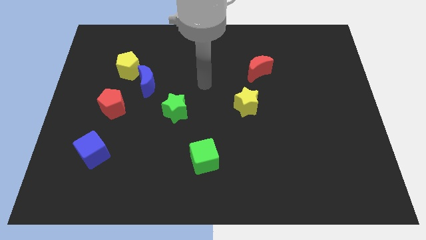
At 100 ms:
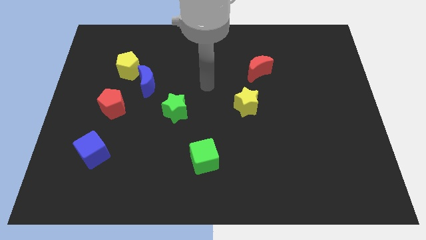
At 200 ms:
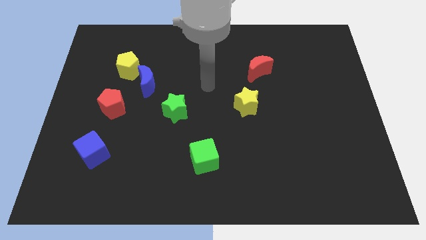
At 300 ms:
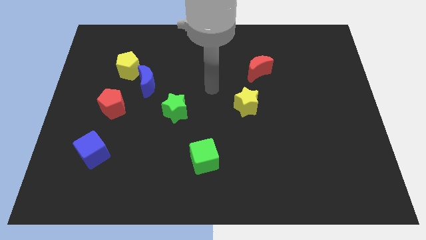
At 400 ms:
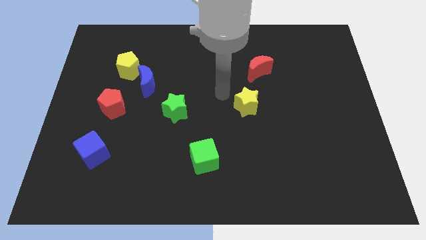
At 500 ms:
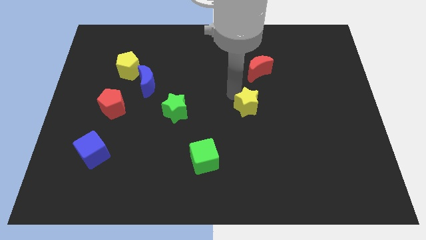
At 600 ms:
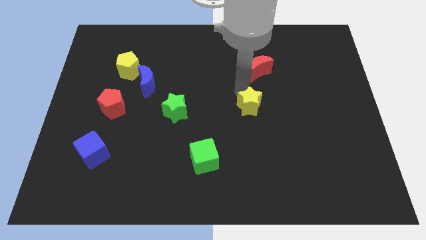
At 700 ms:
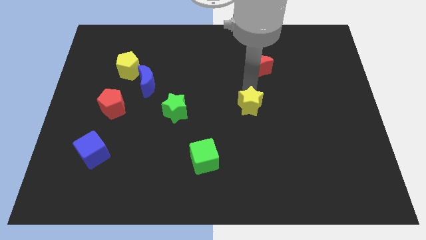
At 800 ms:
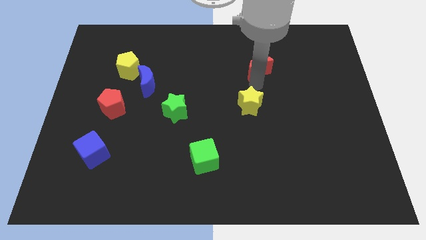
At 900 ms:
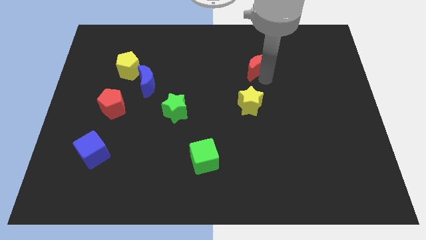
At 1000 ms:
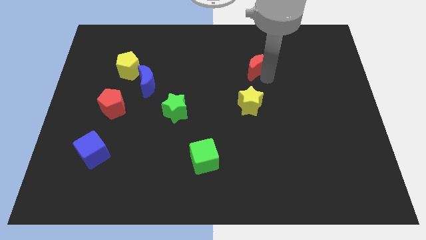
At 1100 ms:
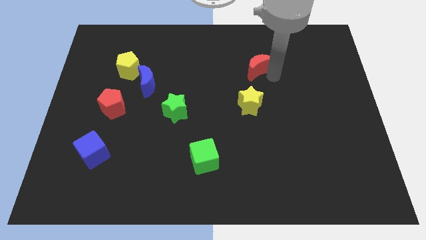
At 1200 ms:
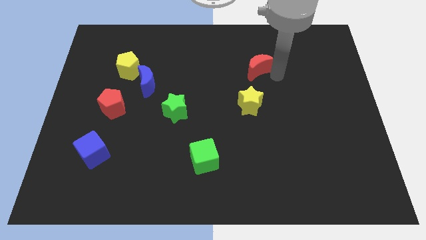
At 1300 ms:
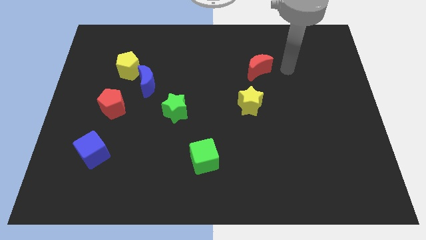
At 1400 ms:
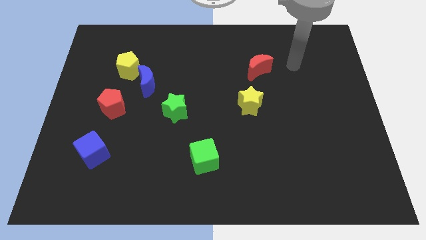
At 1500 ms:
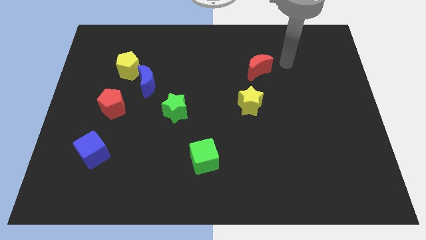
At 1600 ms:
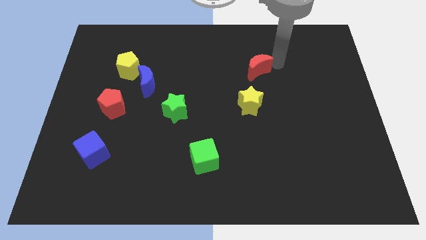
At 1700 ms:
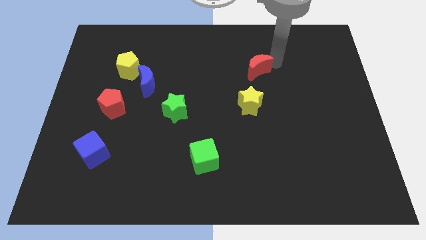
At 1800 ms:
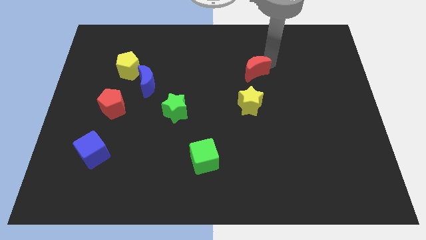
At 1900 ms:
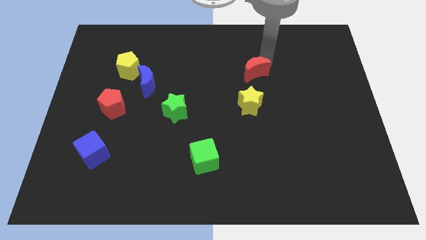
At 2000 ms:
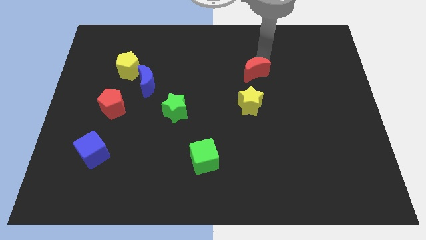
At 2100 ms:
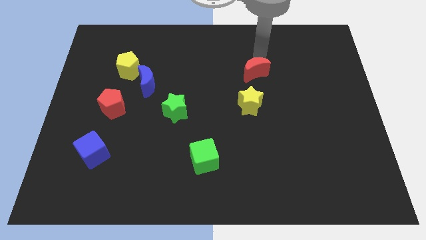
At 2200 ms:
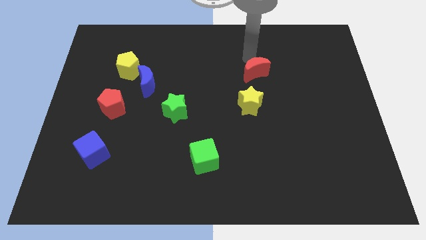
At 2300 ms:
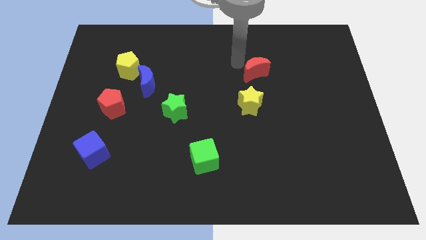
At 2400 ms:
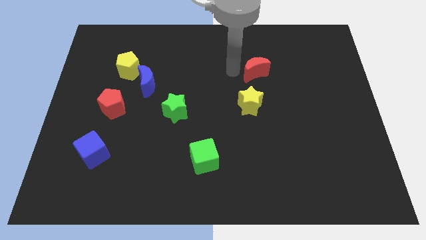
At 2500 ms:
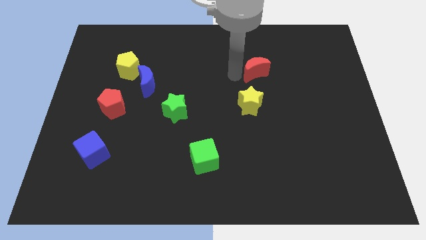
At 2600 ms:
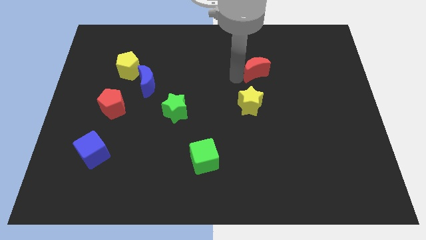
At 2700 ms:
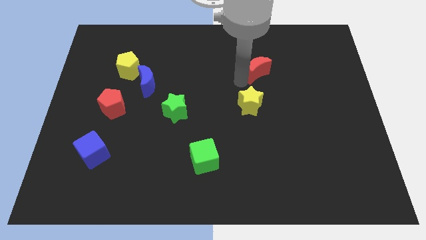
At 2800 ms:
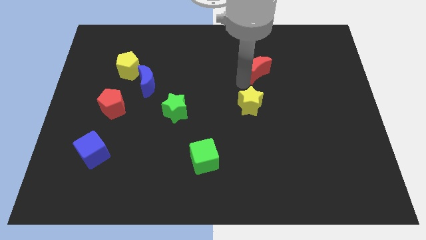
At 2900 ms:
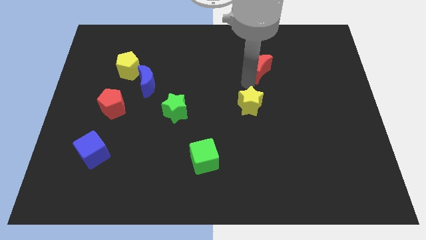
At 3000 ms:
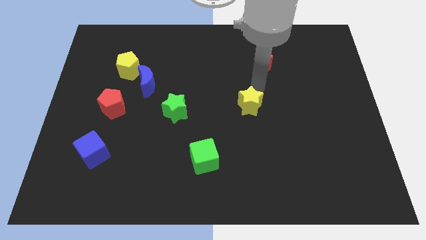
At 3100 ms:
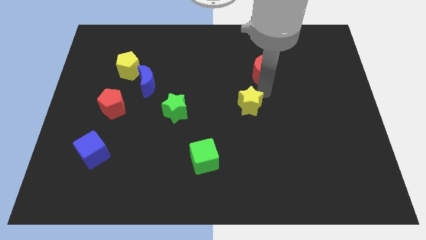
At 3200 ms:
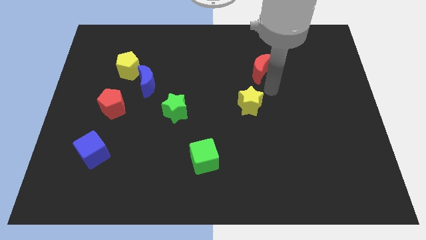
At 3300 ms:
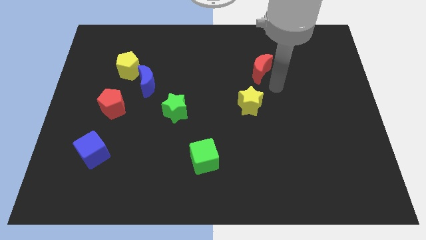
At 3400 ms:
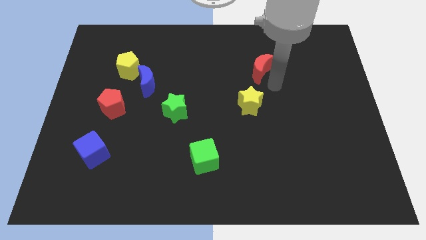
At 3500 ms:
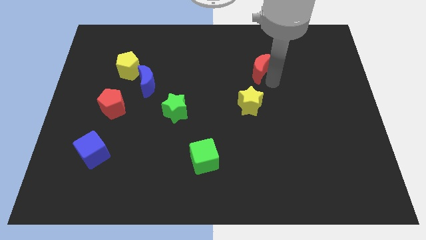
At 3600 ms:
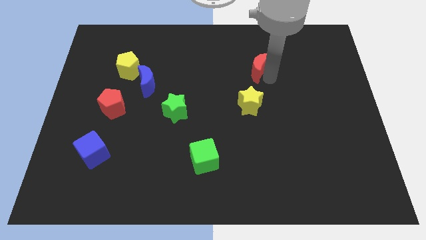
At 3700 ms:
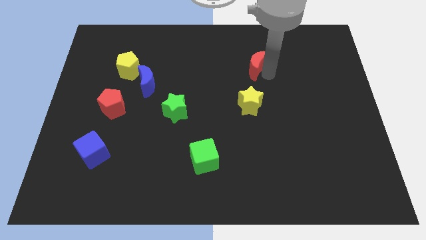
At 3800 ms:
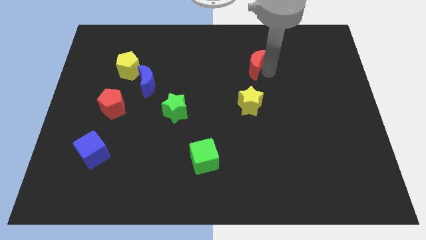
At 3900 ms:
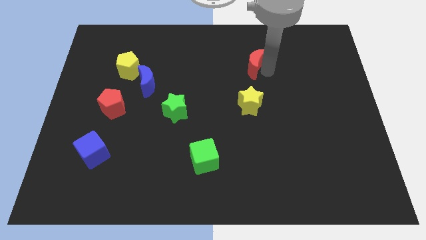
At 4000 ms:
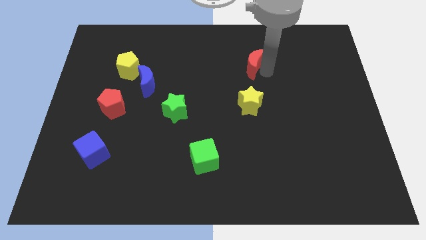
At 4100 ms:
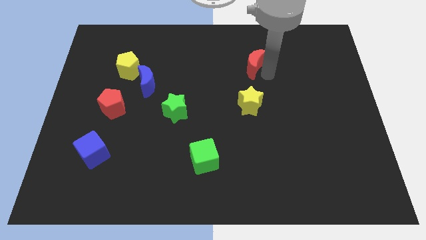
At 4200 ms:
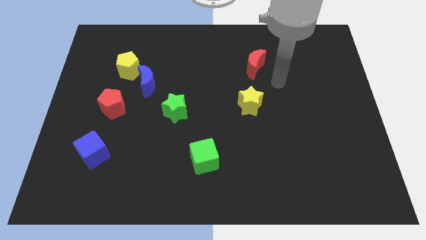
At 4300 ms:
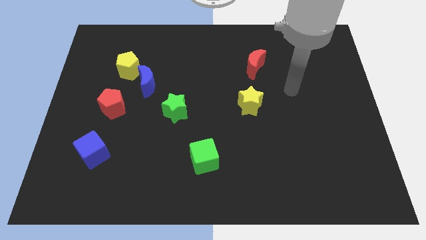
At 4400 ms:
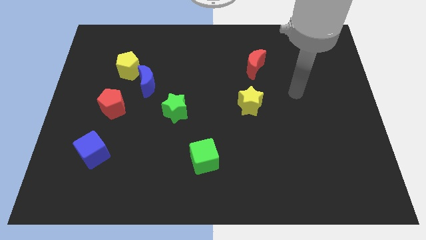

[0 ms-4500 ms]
adjust the red moon vertically above the yellow star

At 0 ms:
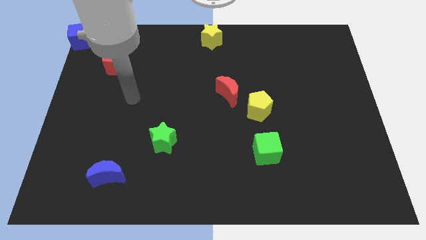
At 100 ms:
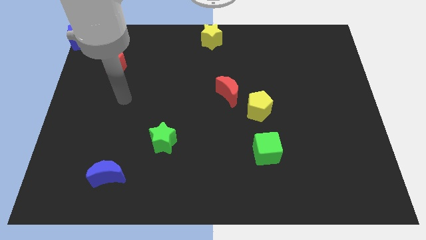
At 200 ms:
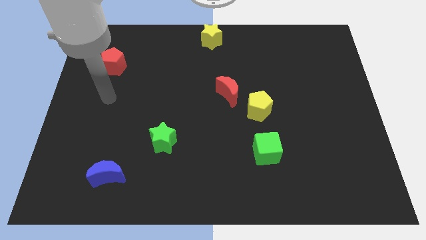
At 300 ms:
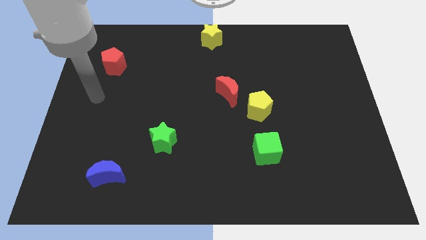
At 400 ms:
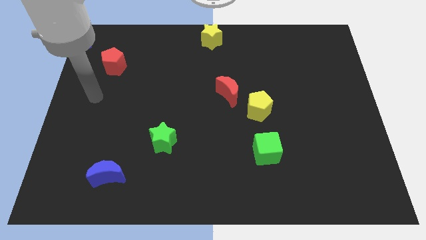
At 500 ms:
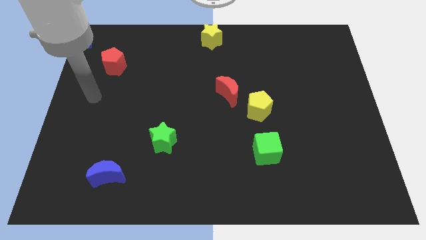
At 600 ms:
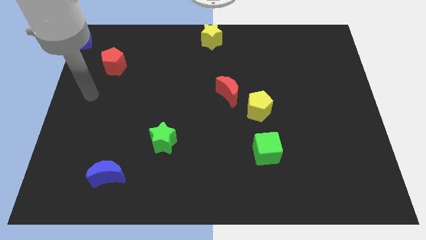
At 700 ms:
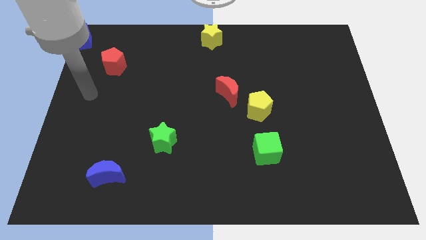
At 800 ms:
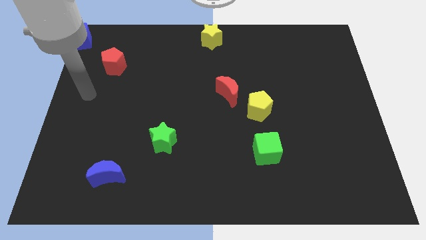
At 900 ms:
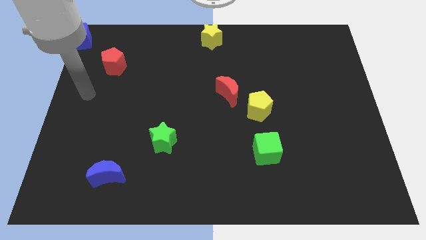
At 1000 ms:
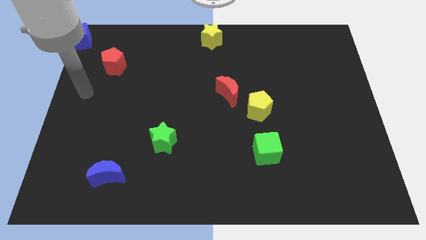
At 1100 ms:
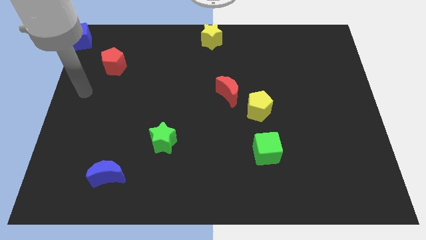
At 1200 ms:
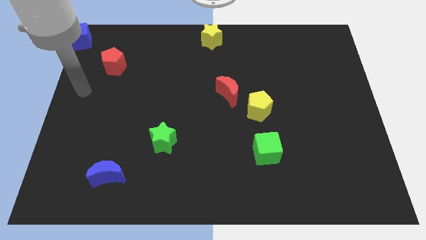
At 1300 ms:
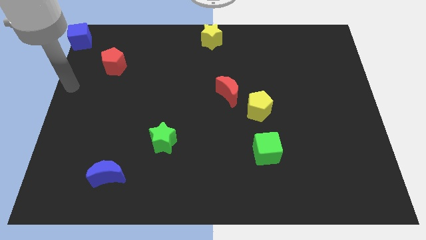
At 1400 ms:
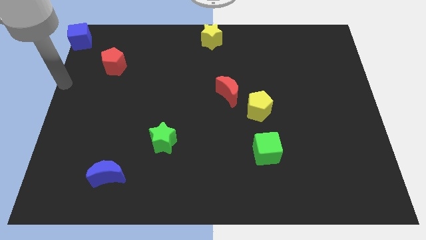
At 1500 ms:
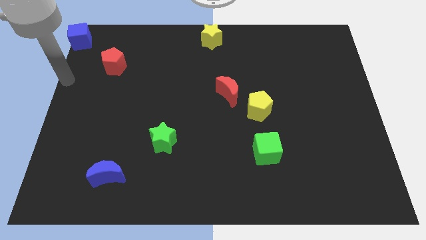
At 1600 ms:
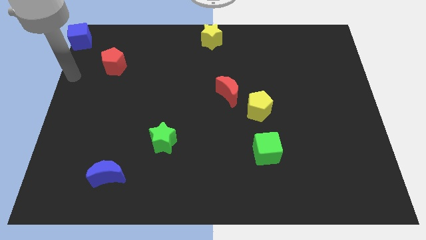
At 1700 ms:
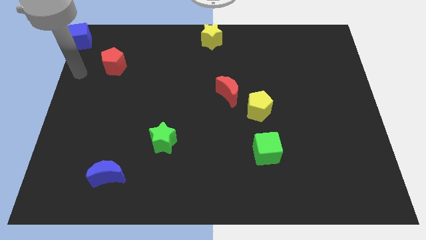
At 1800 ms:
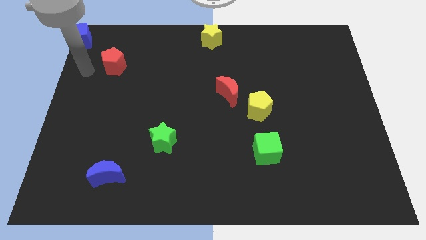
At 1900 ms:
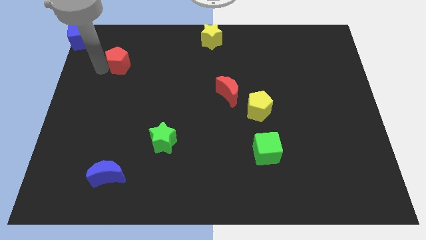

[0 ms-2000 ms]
point your arm at the left of the red pentagon

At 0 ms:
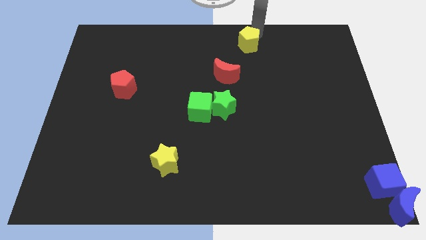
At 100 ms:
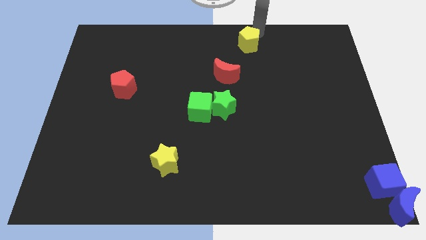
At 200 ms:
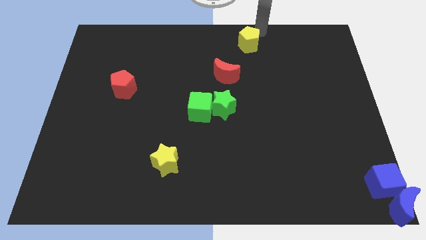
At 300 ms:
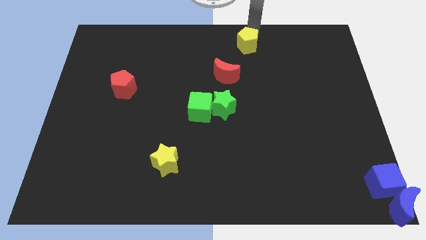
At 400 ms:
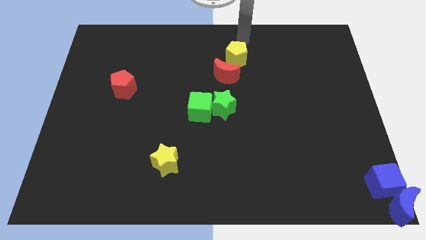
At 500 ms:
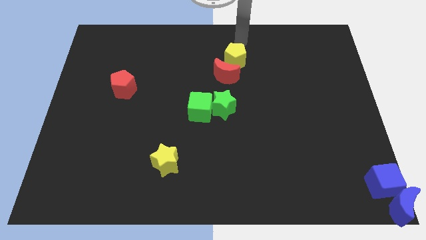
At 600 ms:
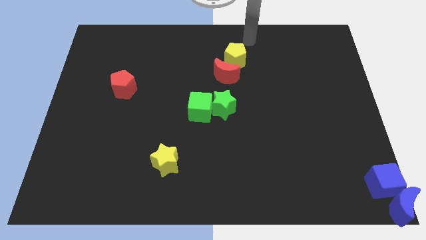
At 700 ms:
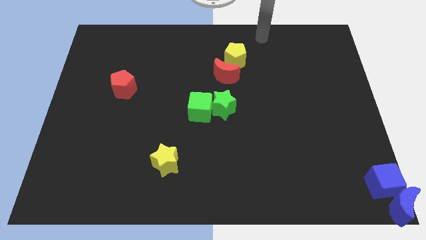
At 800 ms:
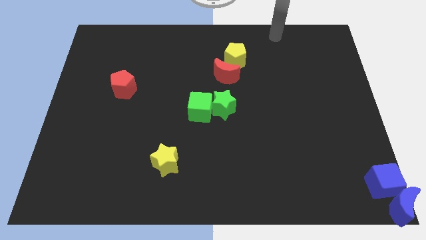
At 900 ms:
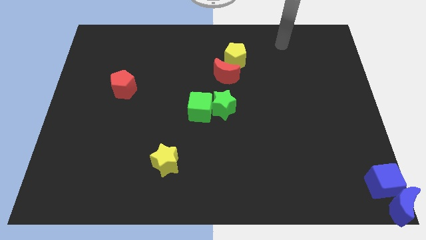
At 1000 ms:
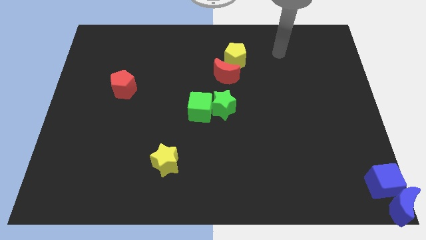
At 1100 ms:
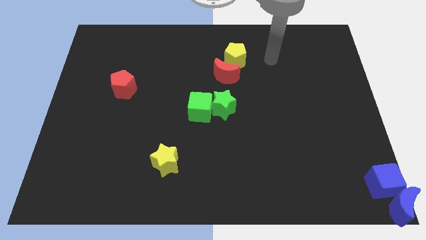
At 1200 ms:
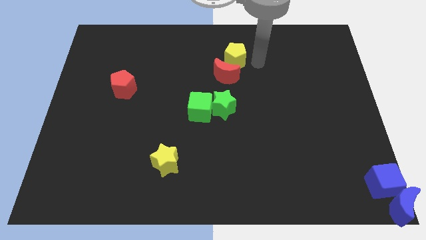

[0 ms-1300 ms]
move the yellow pentagon above the red crescent

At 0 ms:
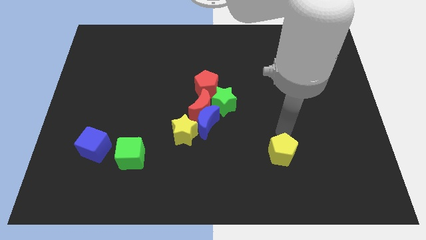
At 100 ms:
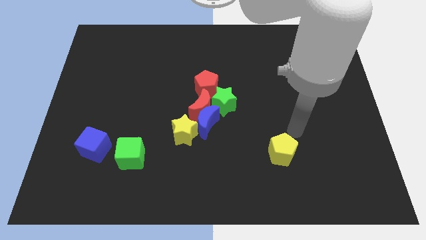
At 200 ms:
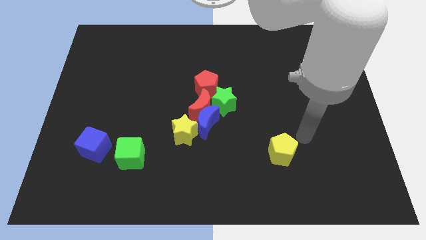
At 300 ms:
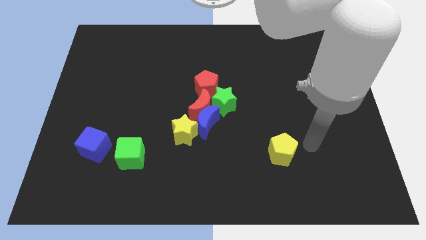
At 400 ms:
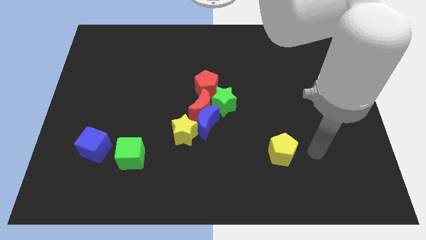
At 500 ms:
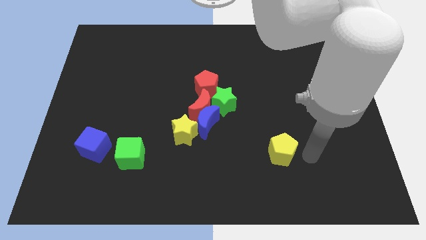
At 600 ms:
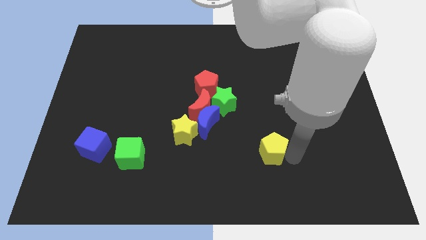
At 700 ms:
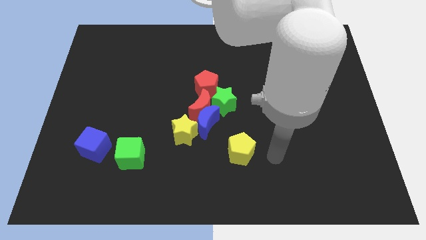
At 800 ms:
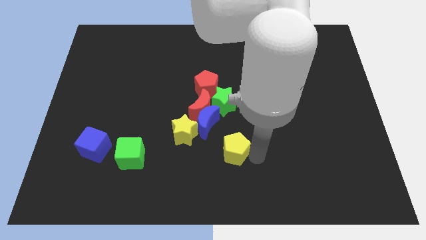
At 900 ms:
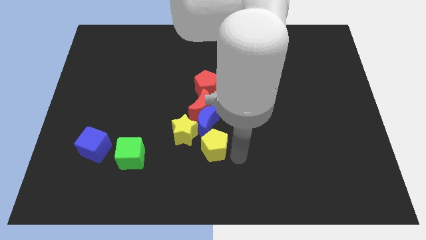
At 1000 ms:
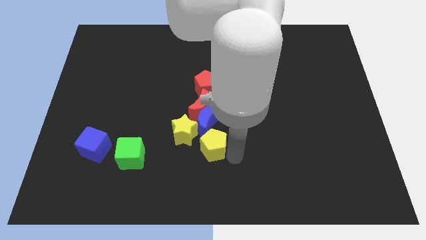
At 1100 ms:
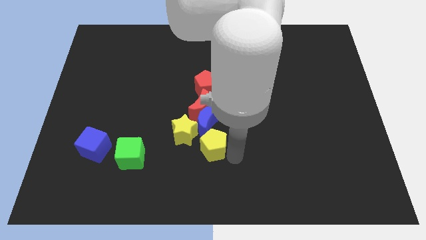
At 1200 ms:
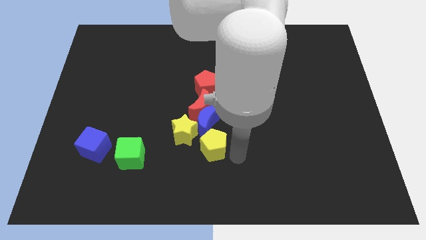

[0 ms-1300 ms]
place the yellow pentagon at the bottom side of the blue moon
